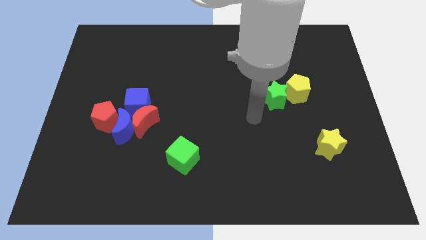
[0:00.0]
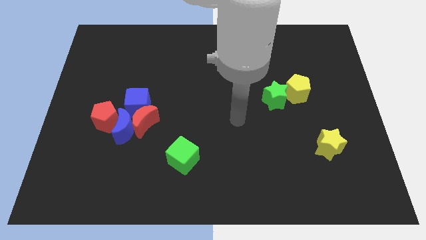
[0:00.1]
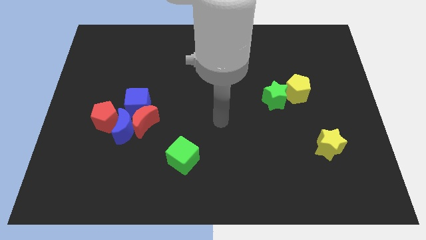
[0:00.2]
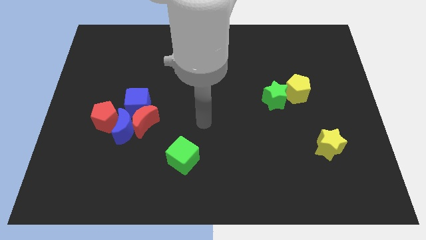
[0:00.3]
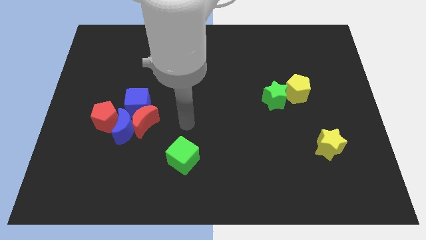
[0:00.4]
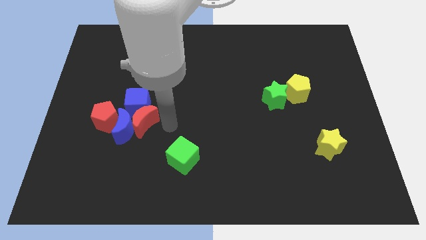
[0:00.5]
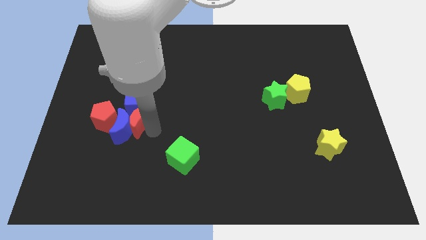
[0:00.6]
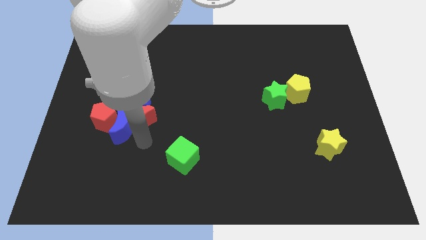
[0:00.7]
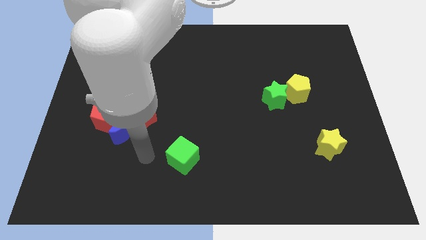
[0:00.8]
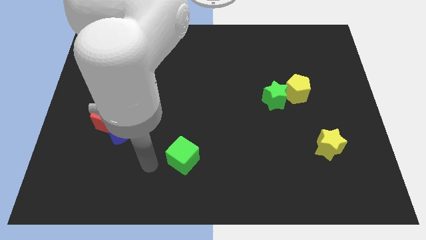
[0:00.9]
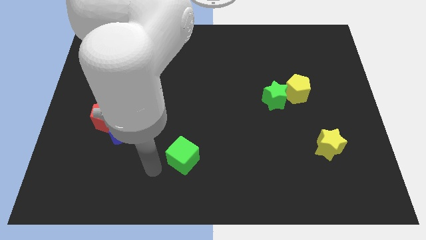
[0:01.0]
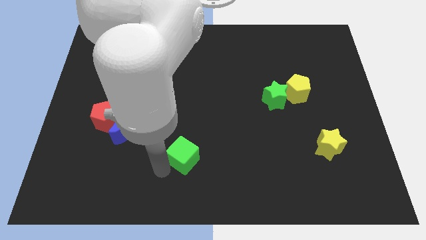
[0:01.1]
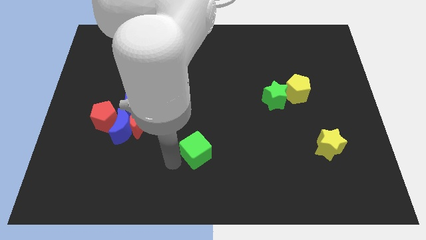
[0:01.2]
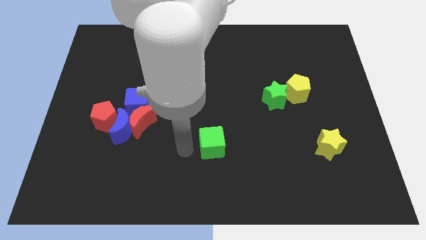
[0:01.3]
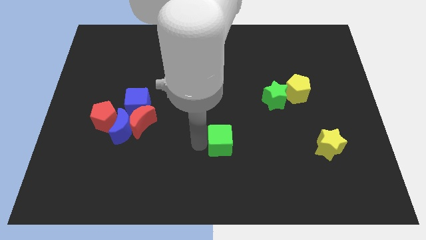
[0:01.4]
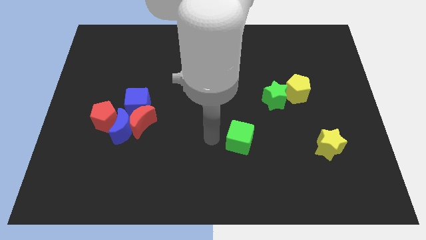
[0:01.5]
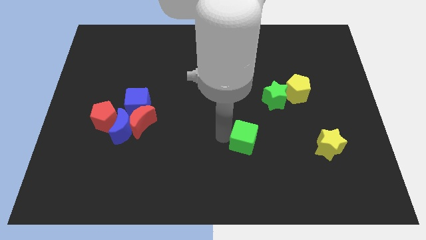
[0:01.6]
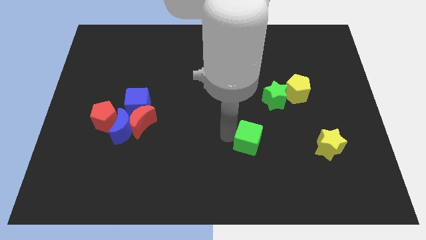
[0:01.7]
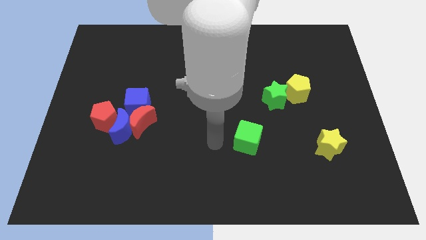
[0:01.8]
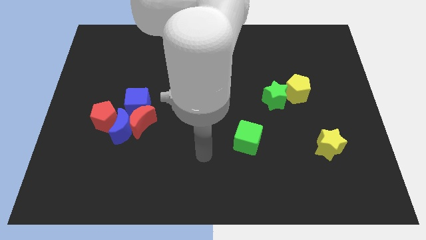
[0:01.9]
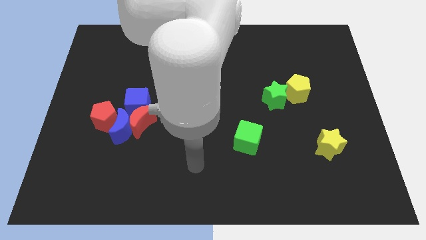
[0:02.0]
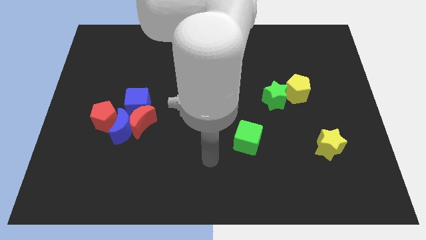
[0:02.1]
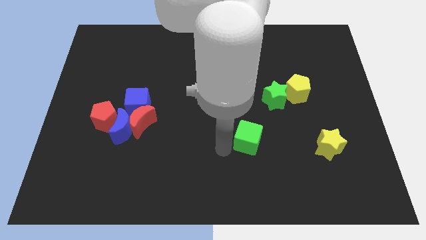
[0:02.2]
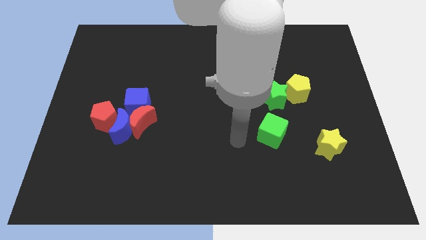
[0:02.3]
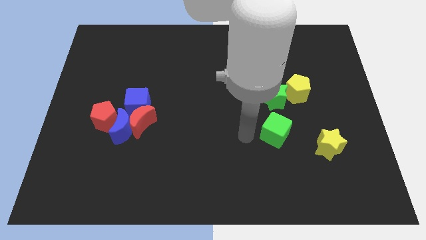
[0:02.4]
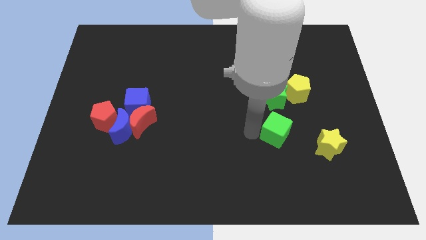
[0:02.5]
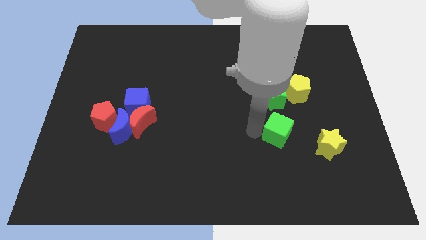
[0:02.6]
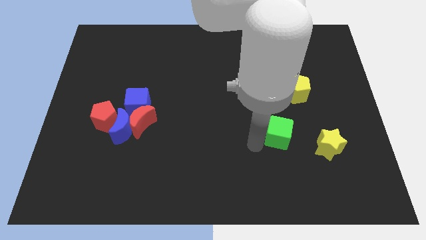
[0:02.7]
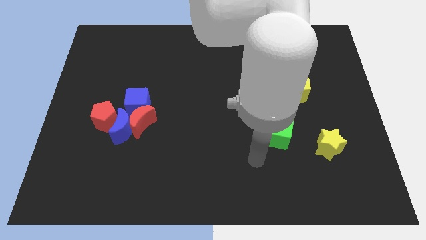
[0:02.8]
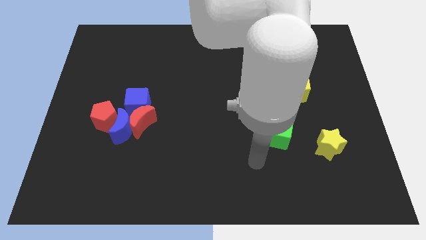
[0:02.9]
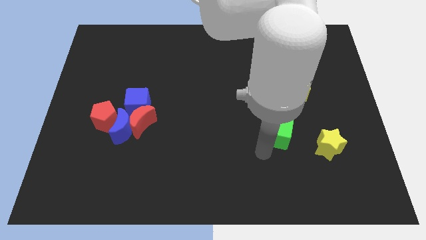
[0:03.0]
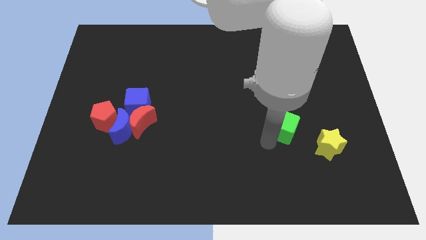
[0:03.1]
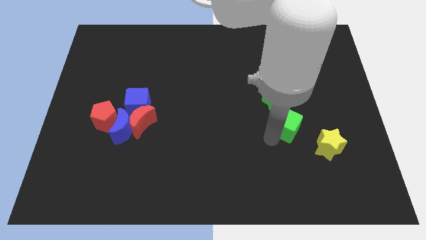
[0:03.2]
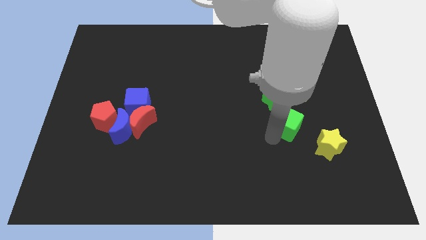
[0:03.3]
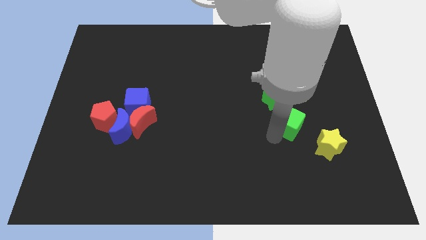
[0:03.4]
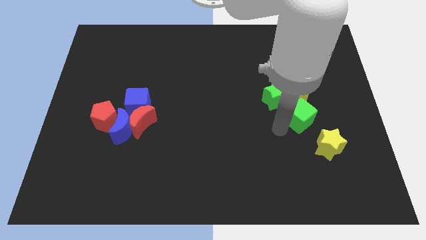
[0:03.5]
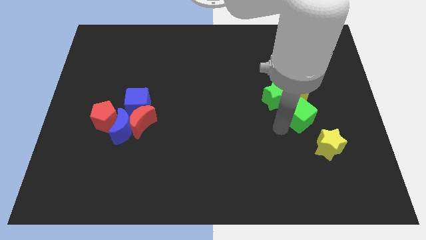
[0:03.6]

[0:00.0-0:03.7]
place the green cube in between the green star and yellow star

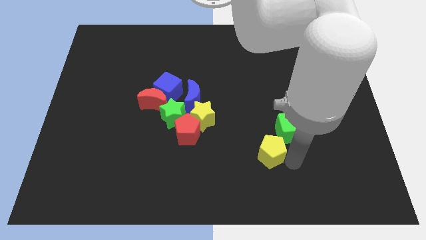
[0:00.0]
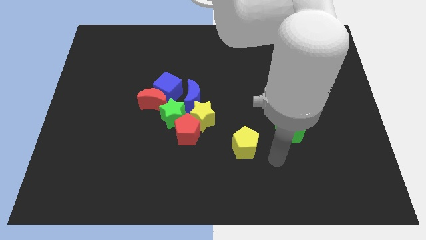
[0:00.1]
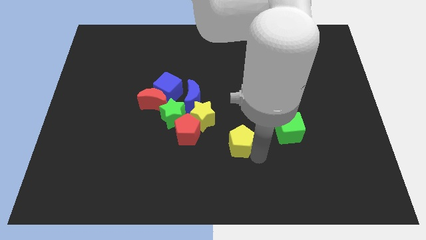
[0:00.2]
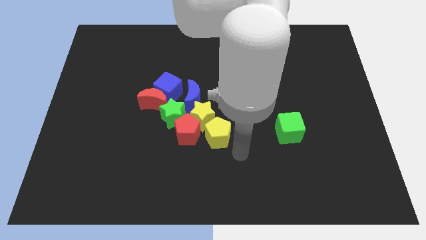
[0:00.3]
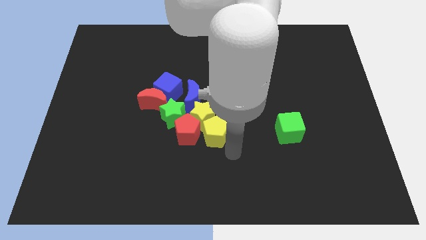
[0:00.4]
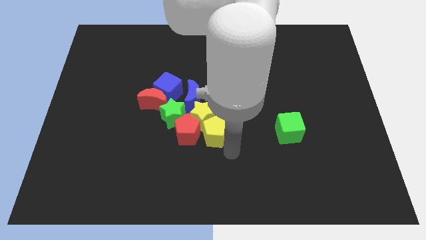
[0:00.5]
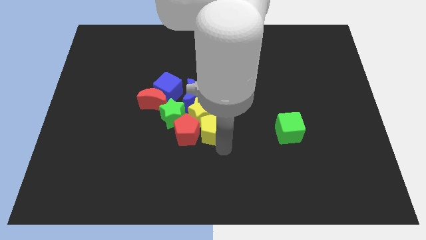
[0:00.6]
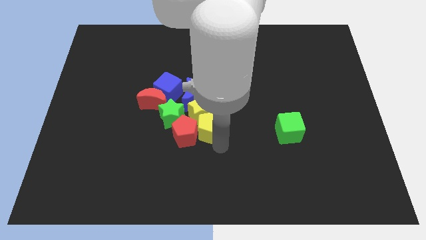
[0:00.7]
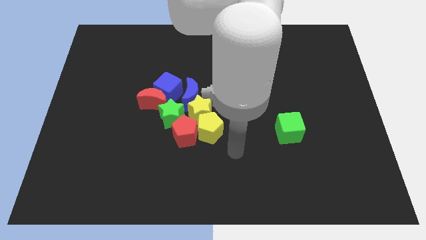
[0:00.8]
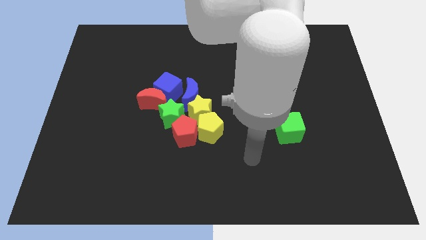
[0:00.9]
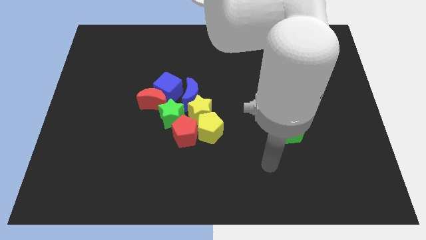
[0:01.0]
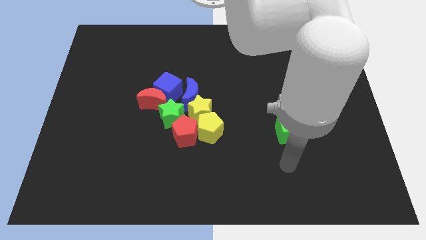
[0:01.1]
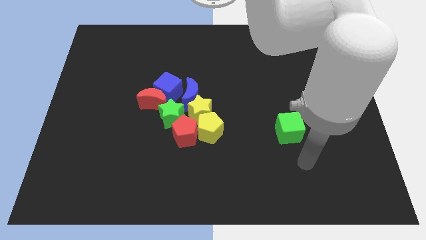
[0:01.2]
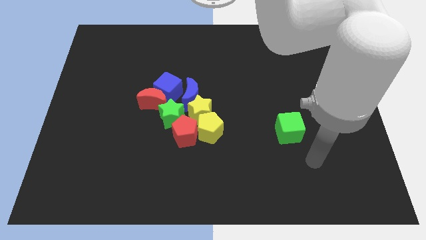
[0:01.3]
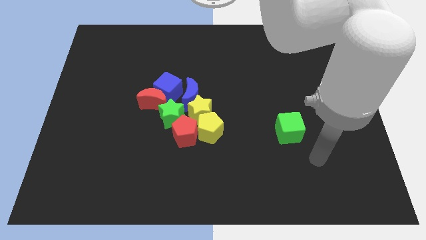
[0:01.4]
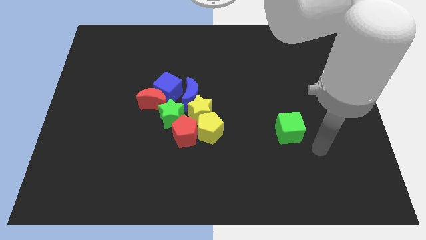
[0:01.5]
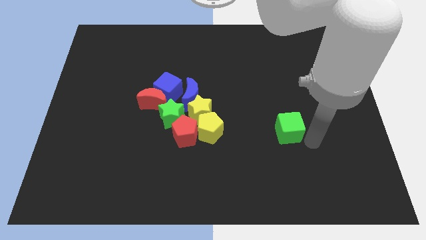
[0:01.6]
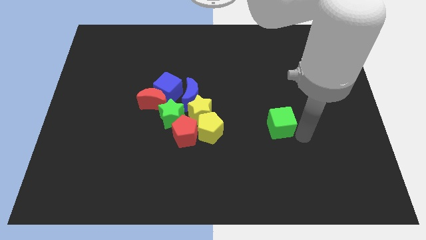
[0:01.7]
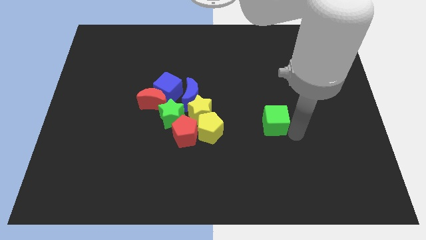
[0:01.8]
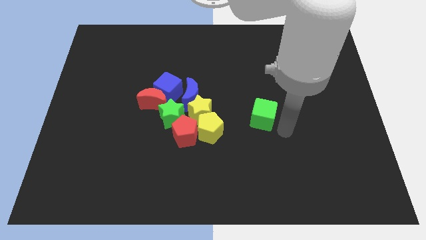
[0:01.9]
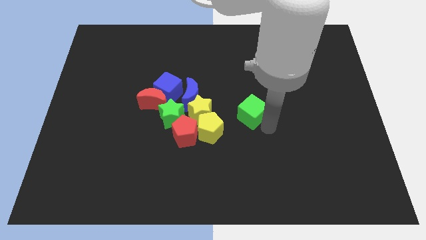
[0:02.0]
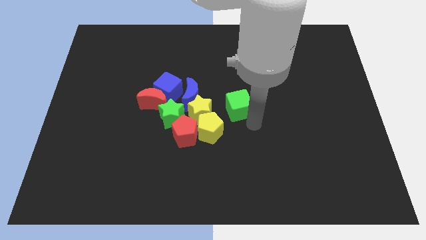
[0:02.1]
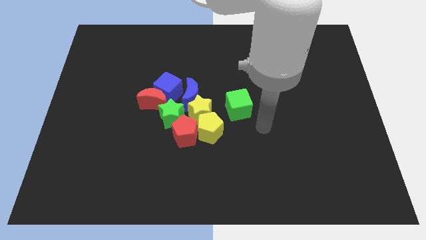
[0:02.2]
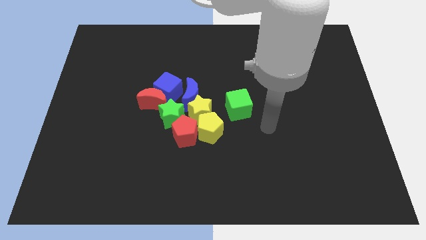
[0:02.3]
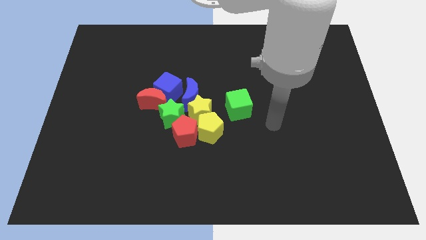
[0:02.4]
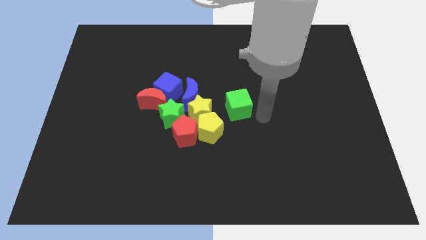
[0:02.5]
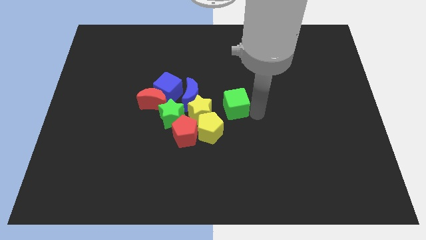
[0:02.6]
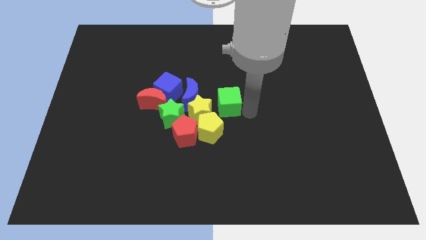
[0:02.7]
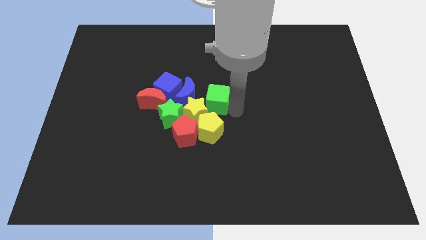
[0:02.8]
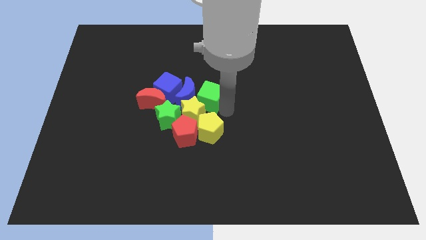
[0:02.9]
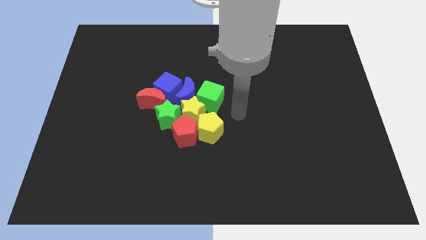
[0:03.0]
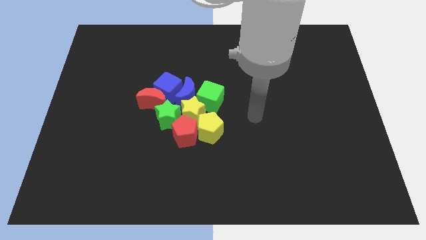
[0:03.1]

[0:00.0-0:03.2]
push the green cube into the group of blocks

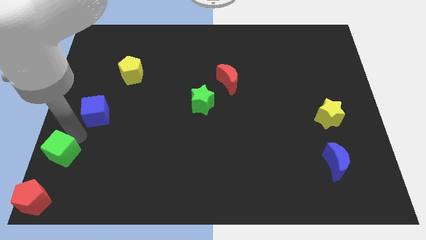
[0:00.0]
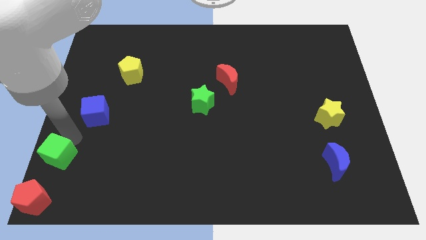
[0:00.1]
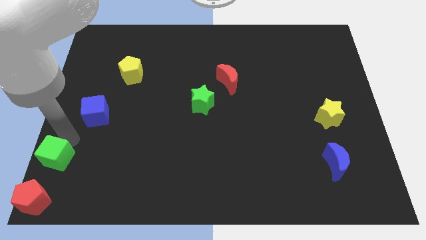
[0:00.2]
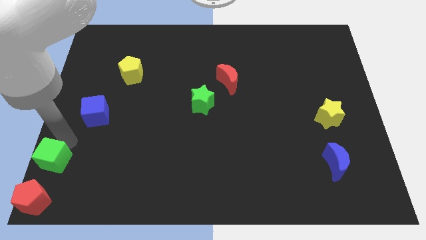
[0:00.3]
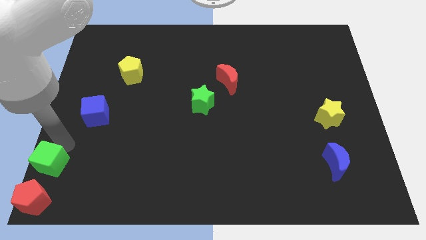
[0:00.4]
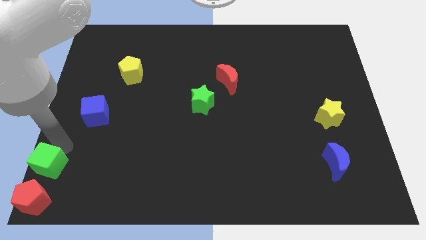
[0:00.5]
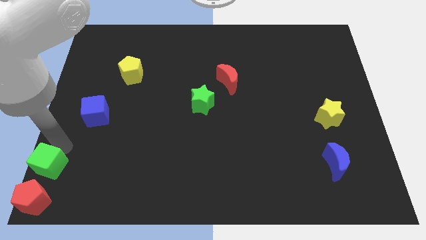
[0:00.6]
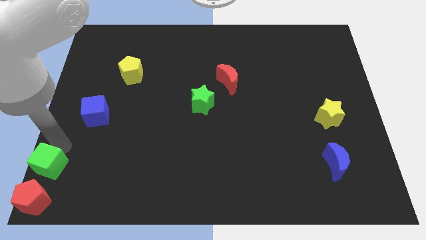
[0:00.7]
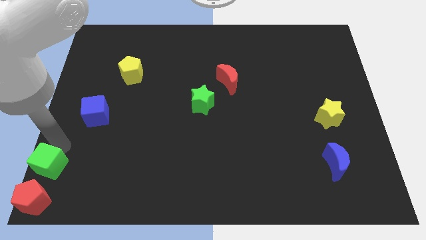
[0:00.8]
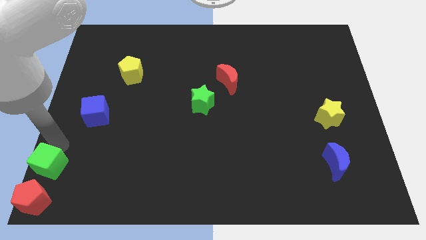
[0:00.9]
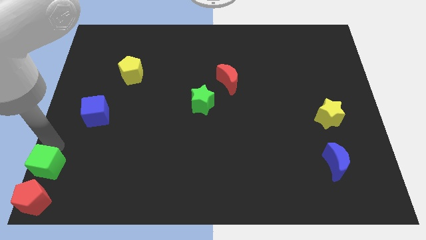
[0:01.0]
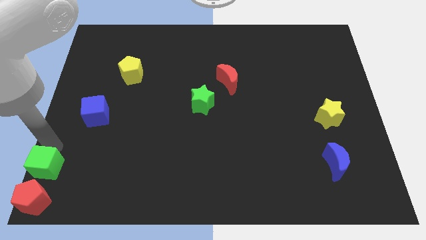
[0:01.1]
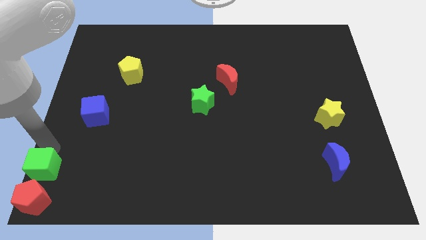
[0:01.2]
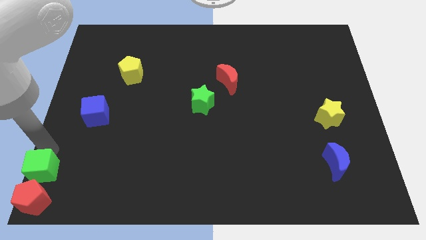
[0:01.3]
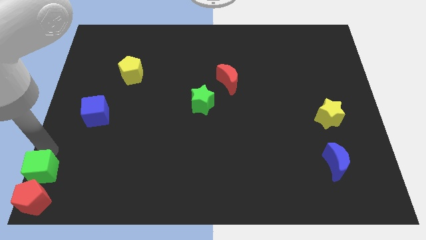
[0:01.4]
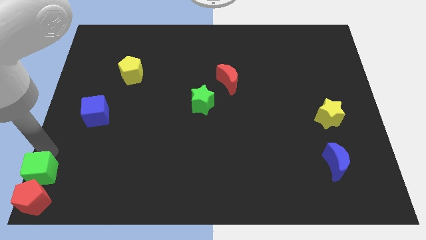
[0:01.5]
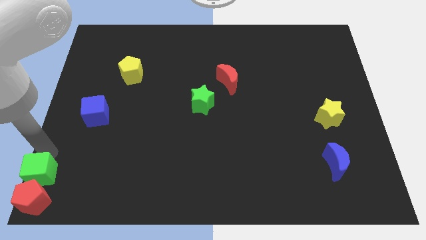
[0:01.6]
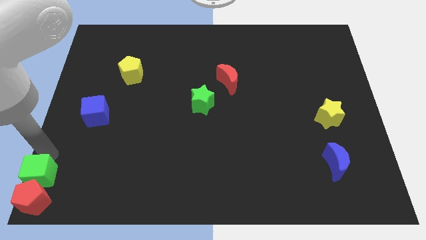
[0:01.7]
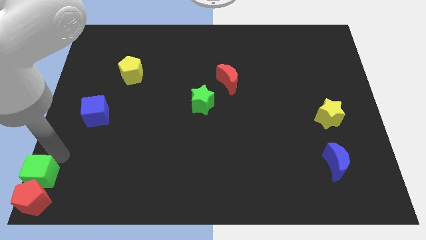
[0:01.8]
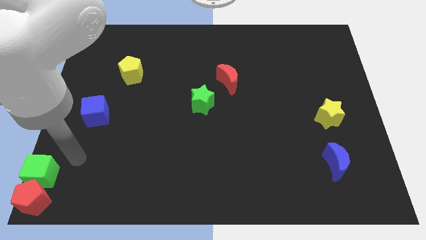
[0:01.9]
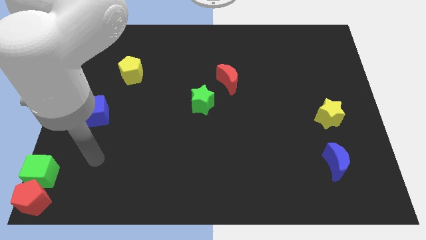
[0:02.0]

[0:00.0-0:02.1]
push the green cube into the red pentagon
